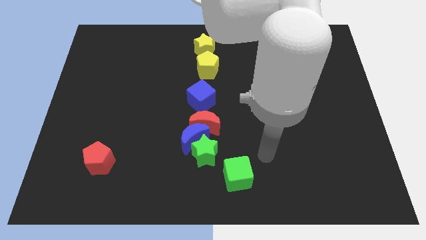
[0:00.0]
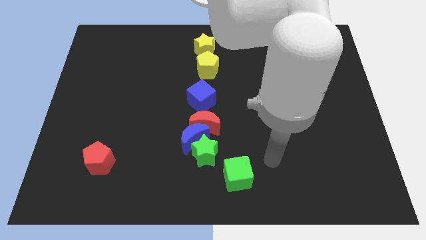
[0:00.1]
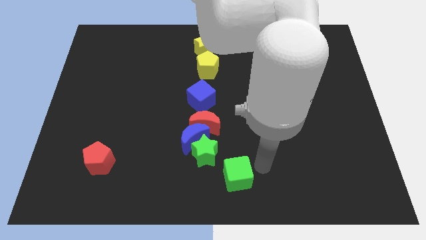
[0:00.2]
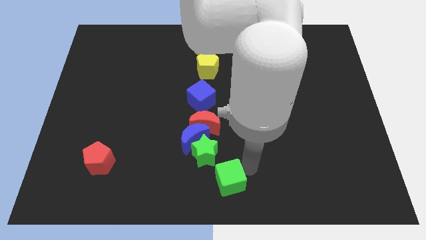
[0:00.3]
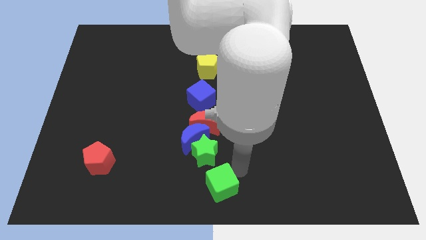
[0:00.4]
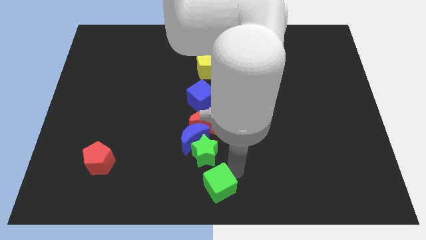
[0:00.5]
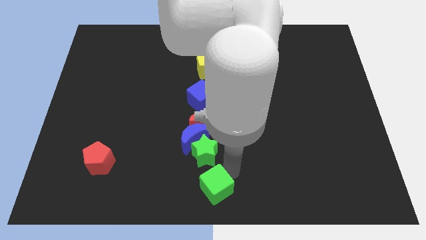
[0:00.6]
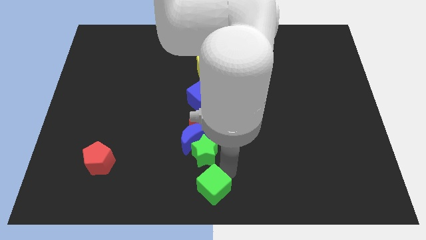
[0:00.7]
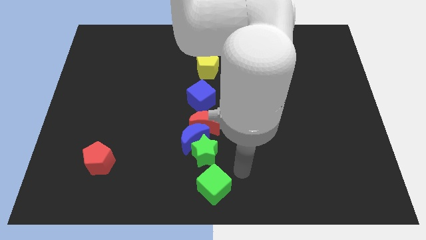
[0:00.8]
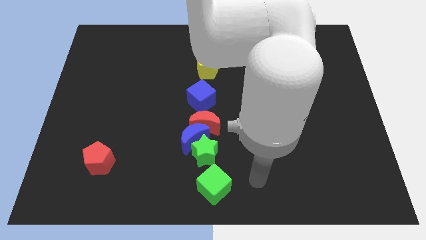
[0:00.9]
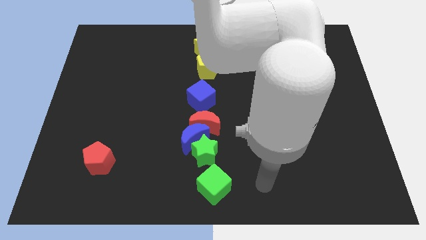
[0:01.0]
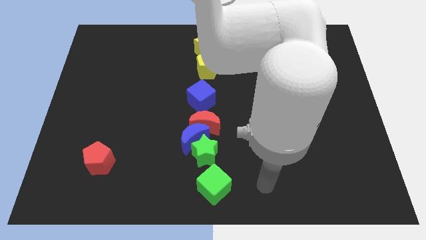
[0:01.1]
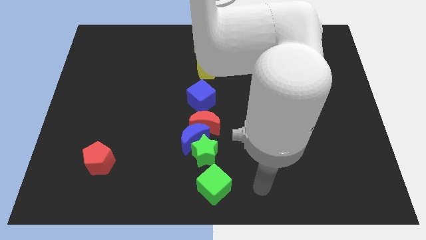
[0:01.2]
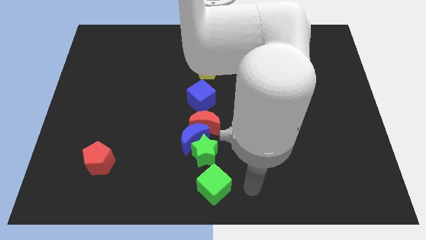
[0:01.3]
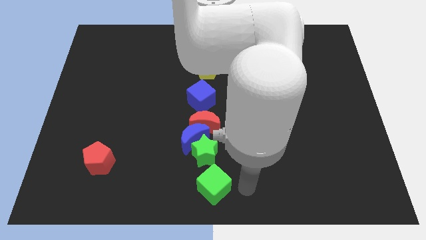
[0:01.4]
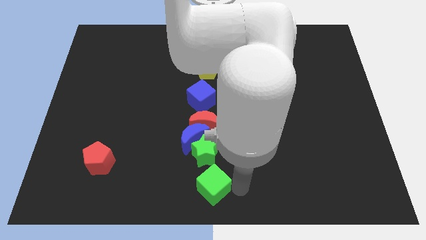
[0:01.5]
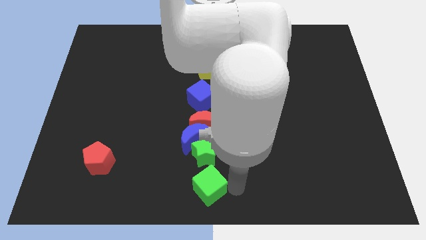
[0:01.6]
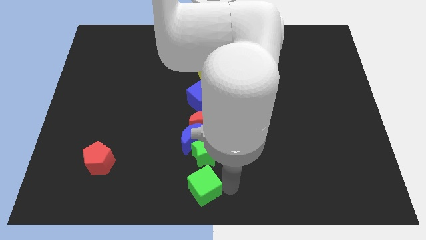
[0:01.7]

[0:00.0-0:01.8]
push the green cube below the green star

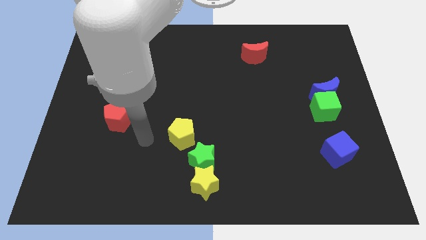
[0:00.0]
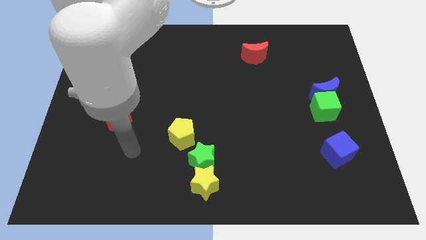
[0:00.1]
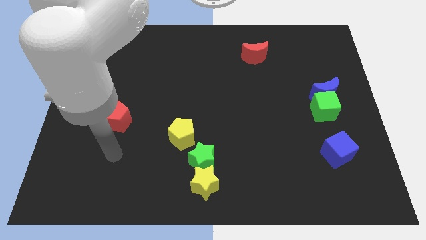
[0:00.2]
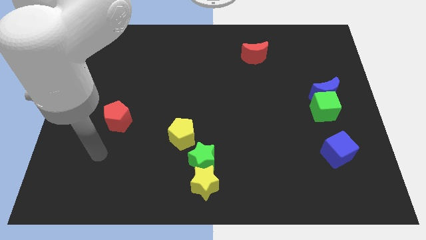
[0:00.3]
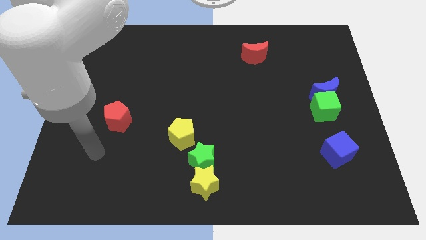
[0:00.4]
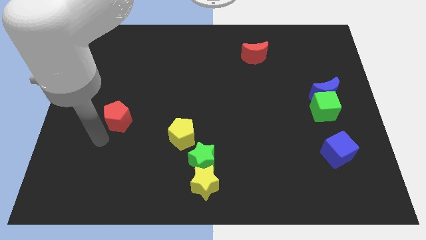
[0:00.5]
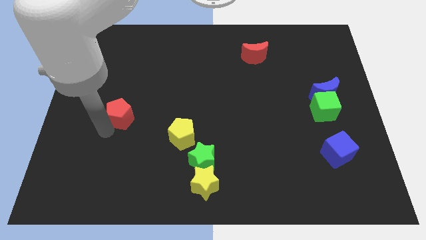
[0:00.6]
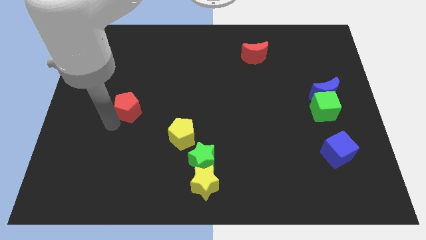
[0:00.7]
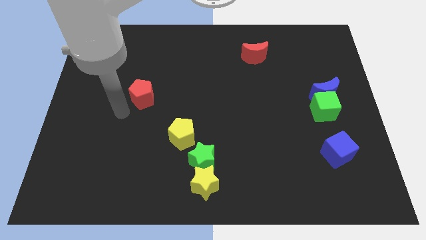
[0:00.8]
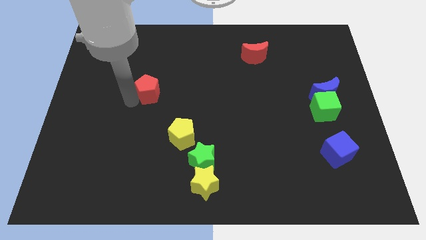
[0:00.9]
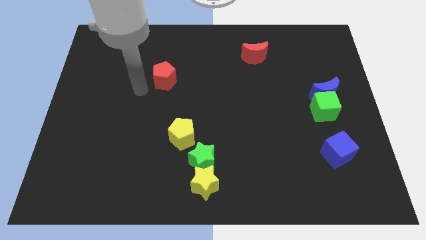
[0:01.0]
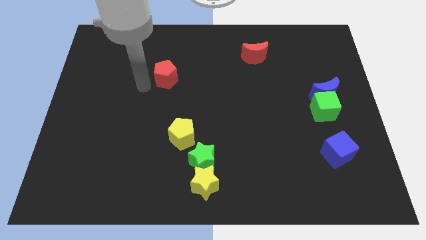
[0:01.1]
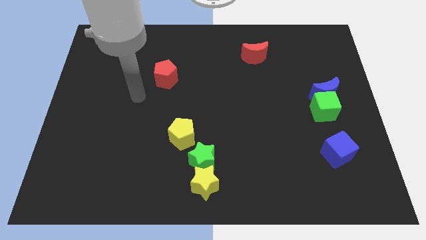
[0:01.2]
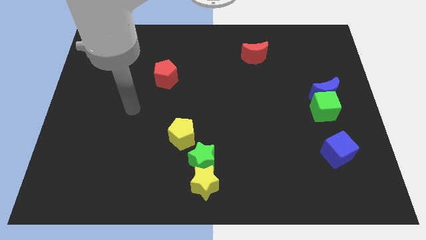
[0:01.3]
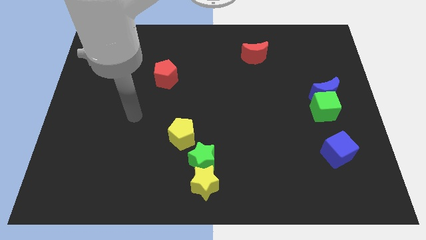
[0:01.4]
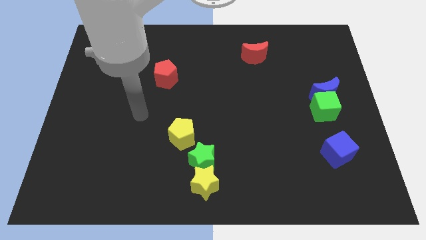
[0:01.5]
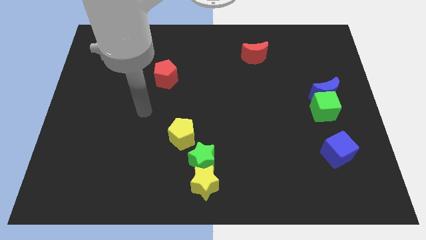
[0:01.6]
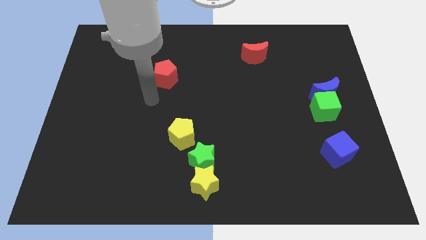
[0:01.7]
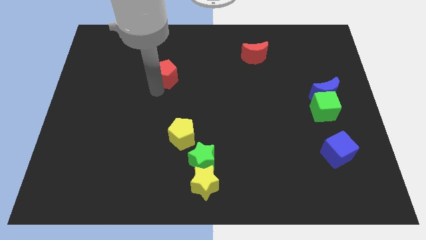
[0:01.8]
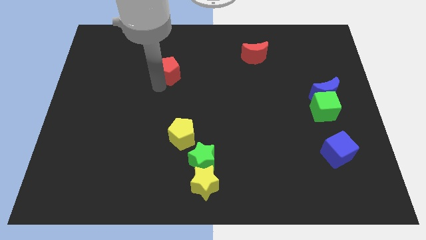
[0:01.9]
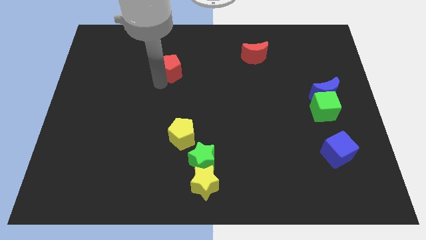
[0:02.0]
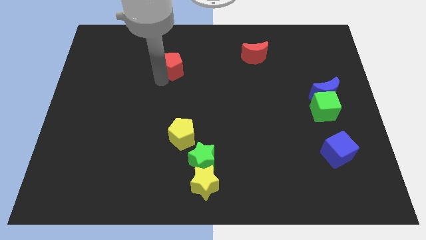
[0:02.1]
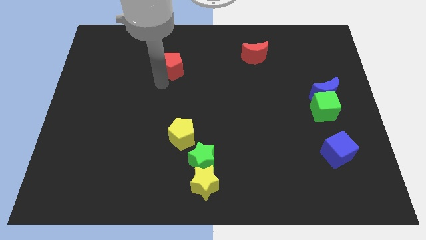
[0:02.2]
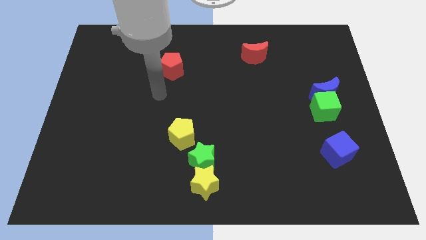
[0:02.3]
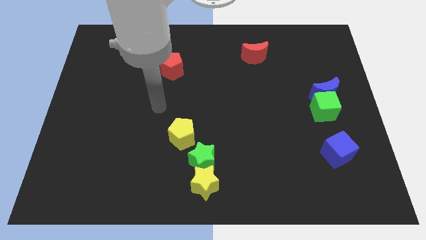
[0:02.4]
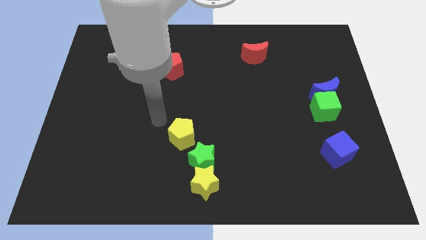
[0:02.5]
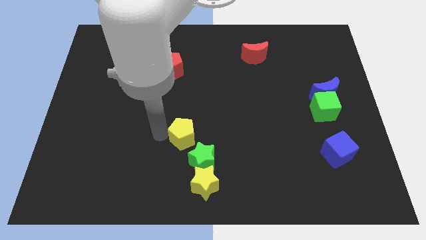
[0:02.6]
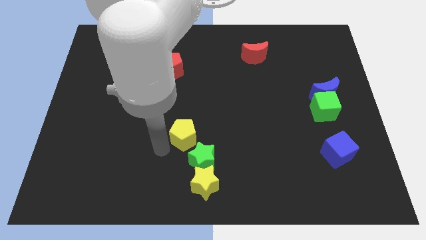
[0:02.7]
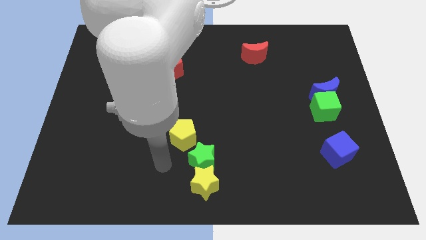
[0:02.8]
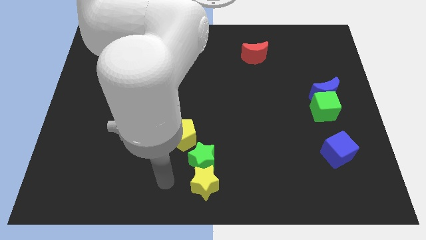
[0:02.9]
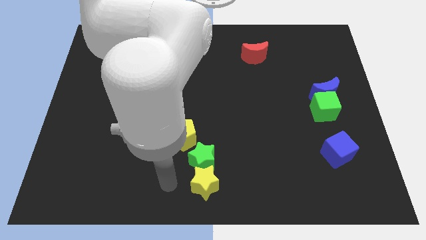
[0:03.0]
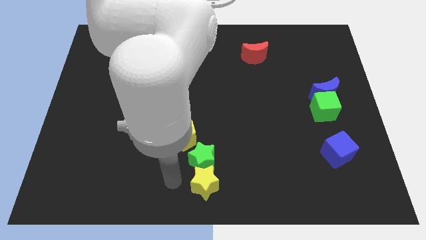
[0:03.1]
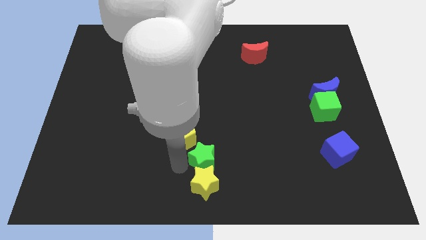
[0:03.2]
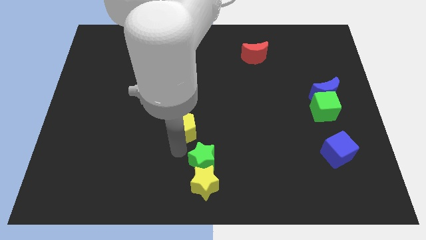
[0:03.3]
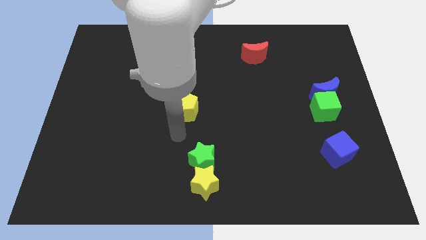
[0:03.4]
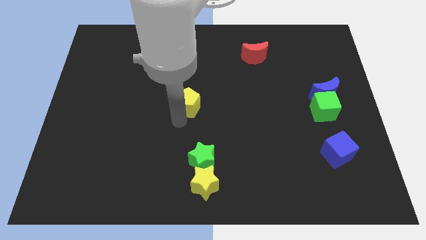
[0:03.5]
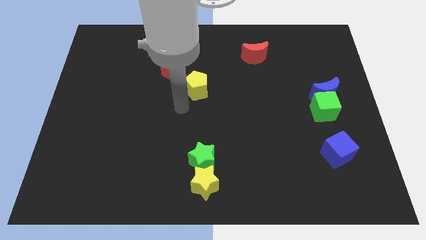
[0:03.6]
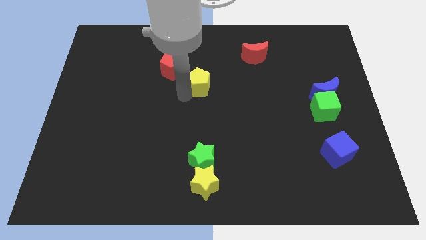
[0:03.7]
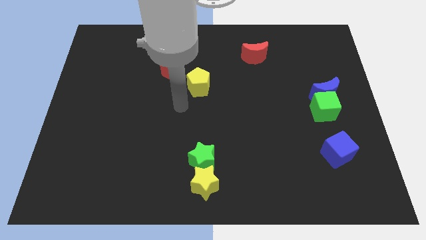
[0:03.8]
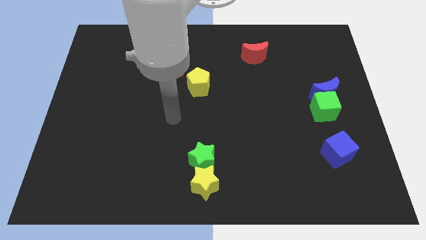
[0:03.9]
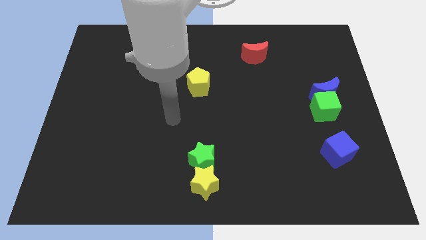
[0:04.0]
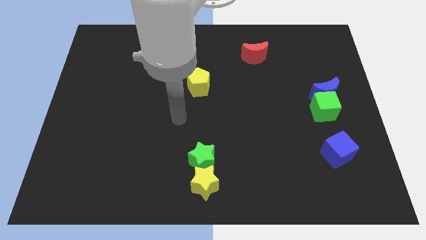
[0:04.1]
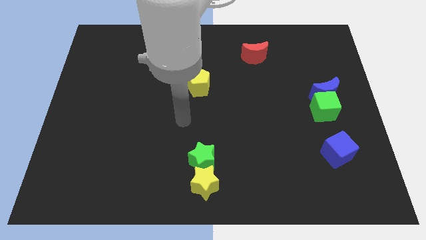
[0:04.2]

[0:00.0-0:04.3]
push the red pentagon towards the top center side of the board

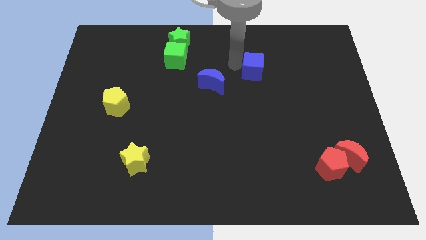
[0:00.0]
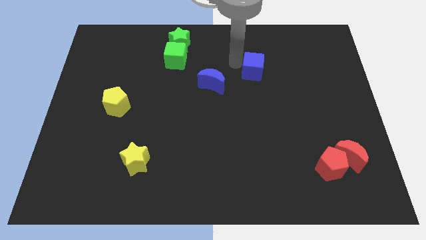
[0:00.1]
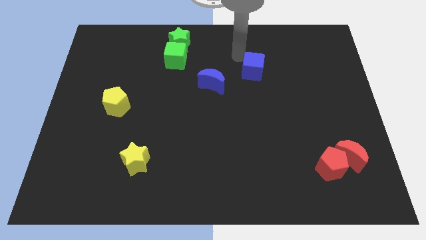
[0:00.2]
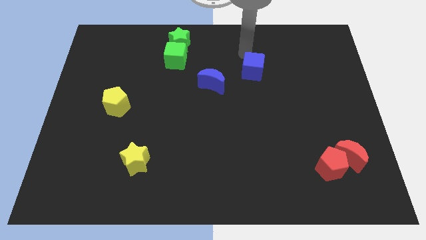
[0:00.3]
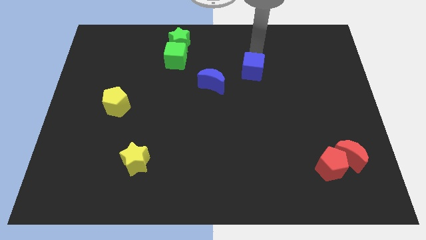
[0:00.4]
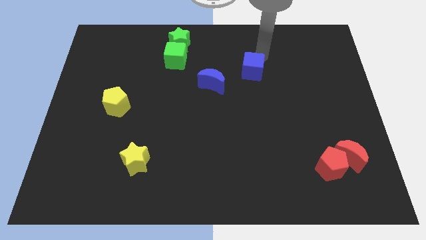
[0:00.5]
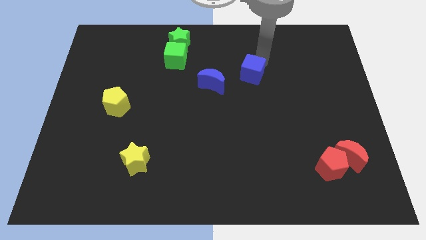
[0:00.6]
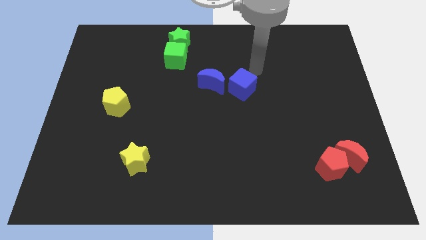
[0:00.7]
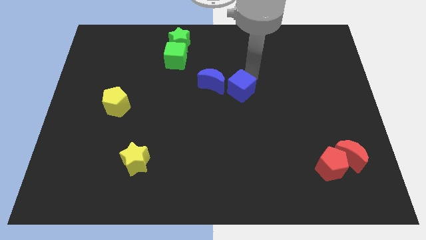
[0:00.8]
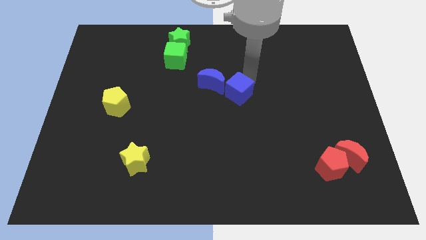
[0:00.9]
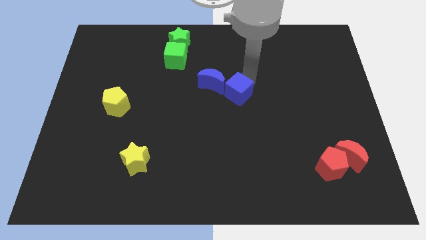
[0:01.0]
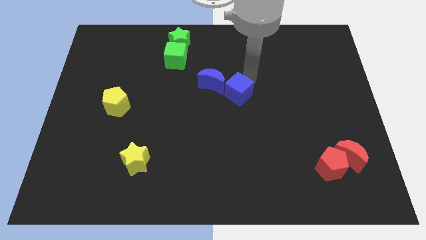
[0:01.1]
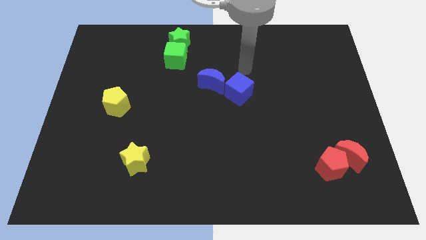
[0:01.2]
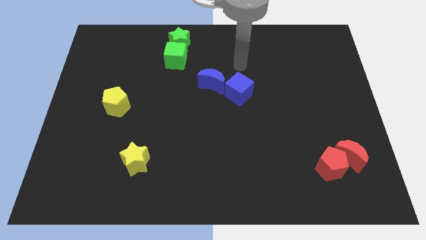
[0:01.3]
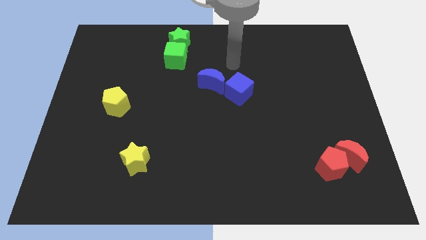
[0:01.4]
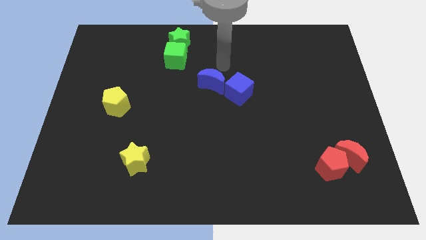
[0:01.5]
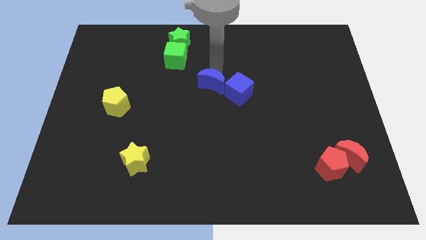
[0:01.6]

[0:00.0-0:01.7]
move blue cube to the right of blue crescent

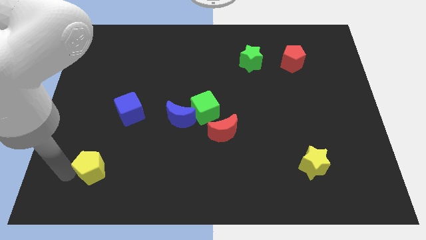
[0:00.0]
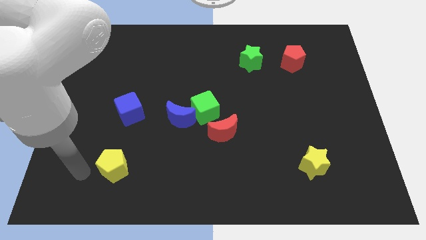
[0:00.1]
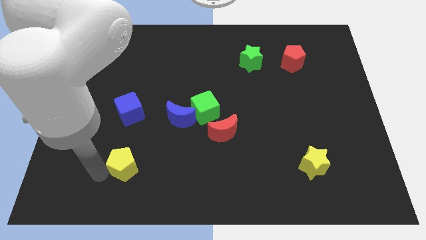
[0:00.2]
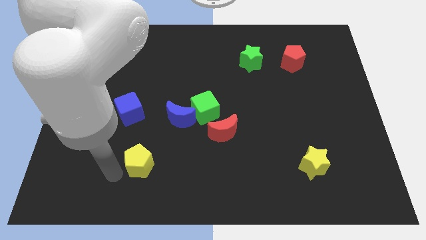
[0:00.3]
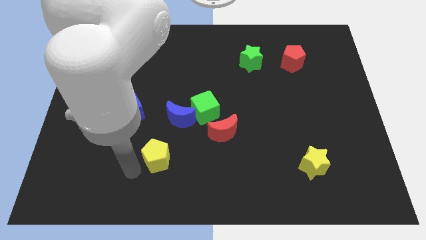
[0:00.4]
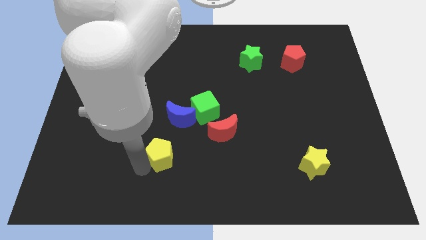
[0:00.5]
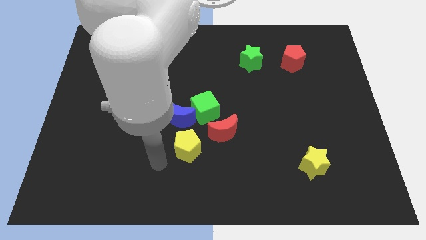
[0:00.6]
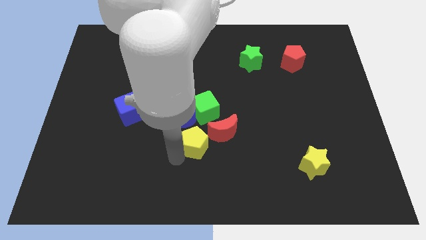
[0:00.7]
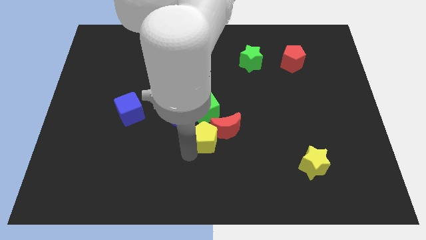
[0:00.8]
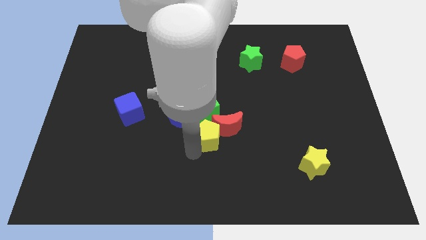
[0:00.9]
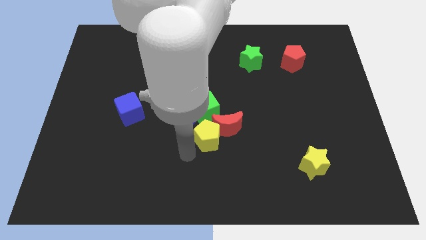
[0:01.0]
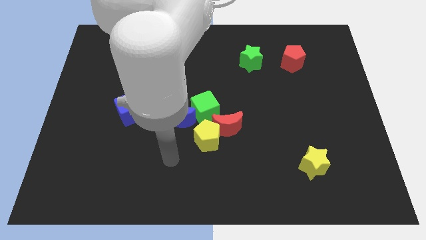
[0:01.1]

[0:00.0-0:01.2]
move yellow pentagon into red moon
